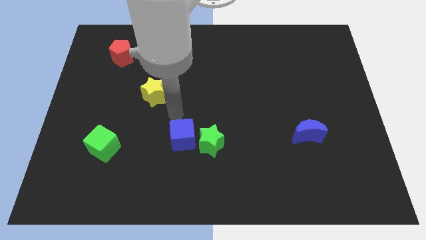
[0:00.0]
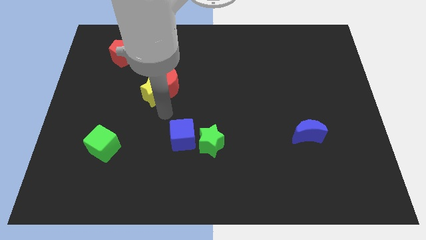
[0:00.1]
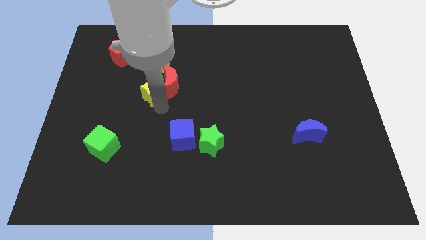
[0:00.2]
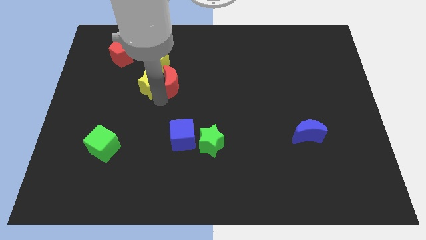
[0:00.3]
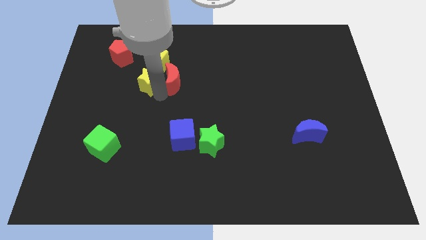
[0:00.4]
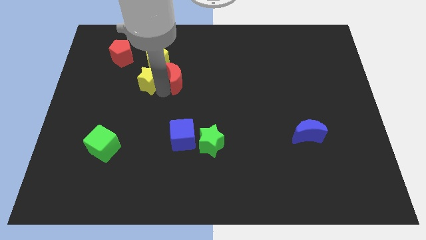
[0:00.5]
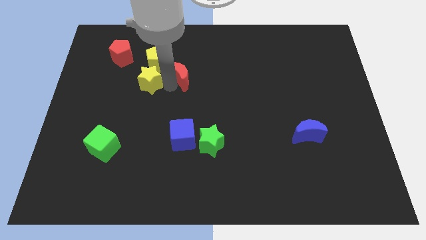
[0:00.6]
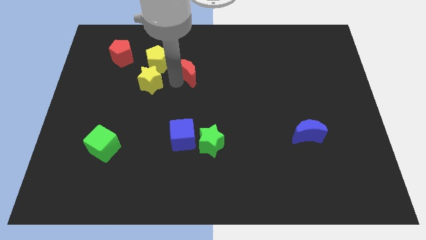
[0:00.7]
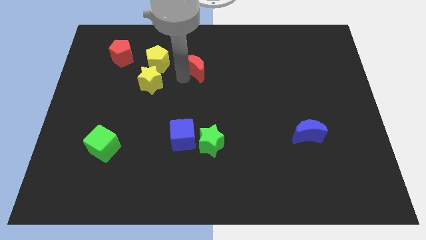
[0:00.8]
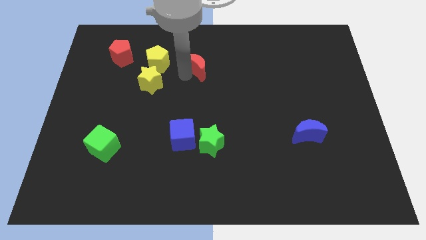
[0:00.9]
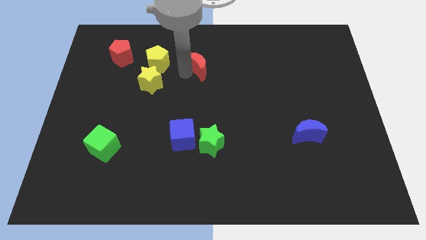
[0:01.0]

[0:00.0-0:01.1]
move the red crescent to the right side of the yellow pentagon

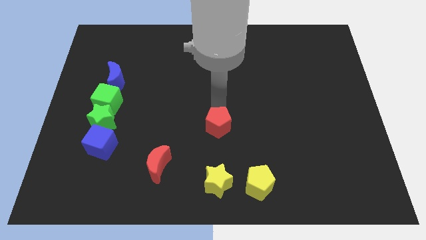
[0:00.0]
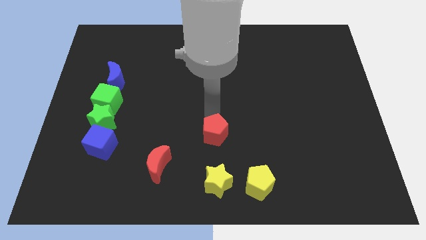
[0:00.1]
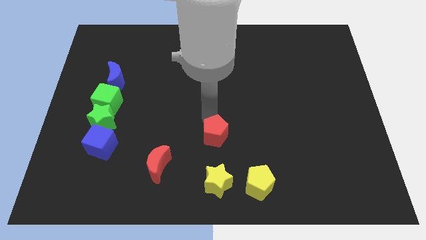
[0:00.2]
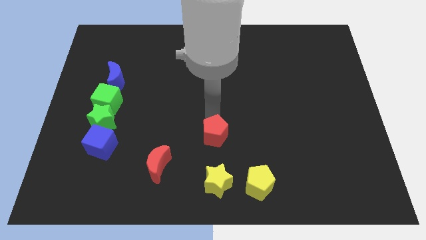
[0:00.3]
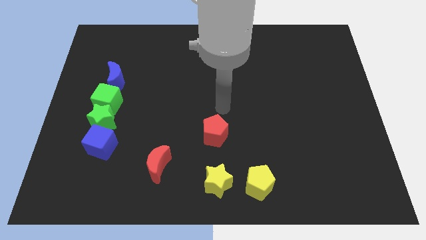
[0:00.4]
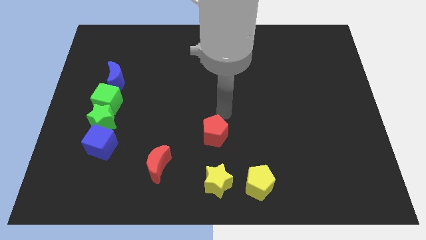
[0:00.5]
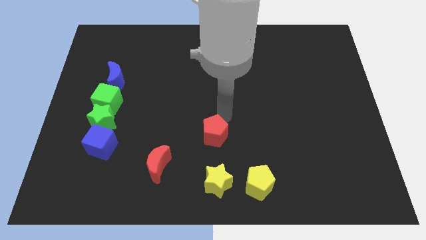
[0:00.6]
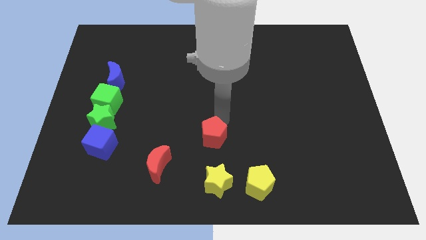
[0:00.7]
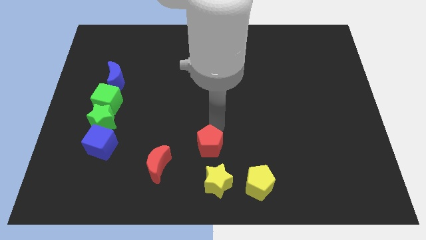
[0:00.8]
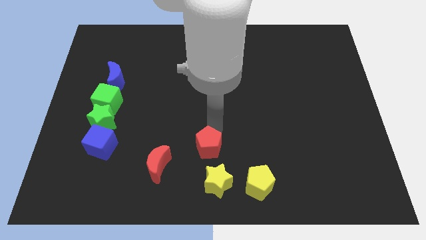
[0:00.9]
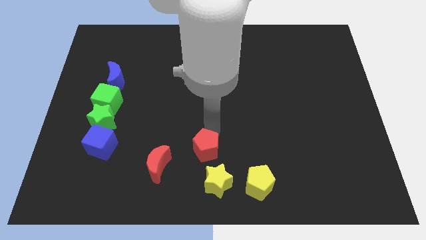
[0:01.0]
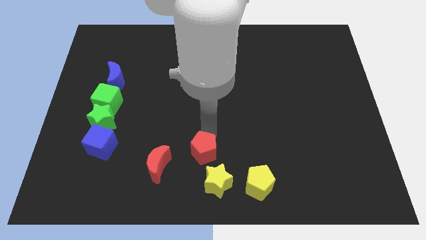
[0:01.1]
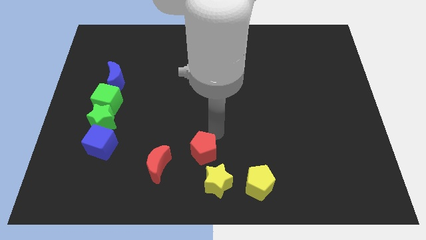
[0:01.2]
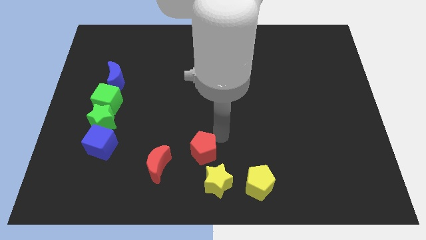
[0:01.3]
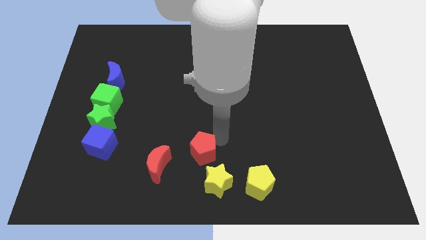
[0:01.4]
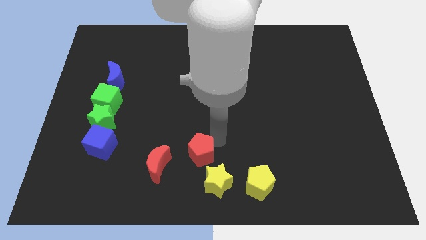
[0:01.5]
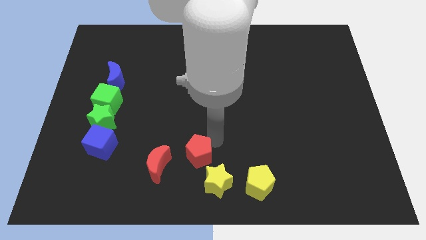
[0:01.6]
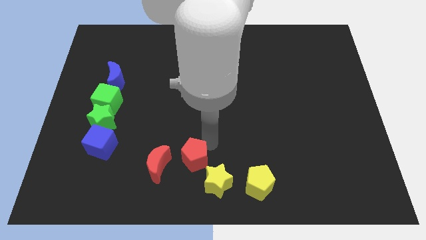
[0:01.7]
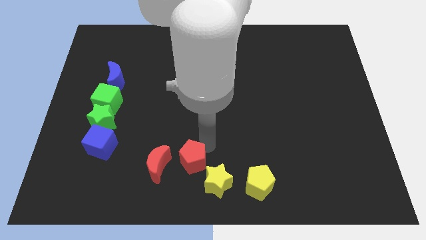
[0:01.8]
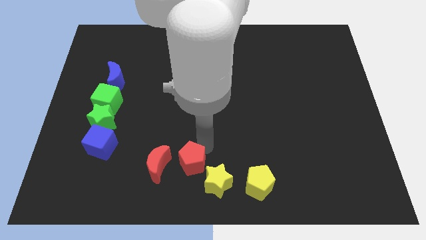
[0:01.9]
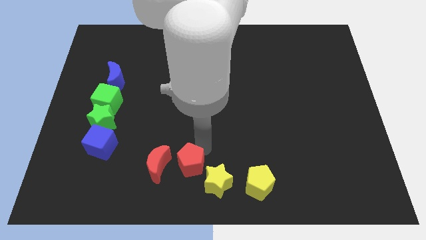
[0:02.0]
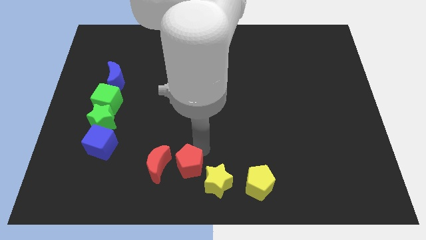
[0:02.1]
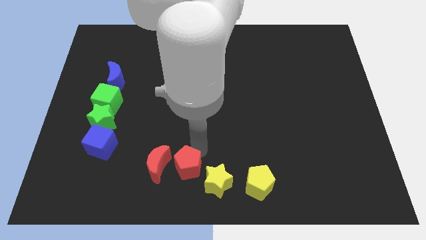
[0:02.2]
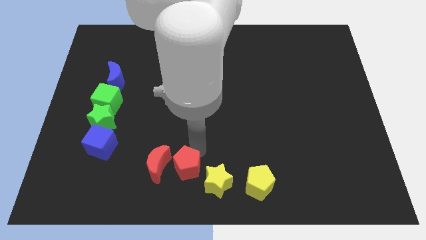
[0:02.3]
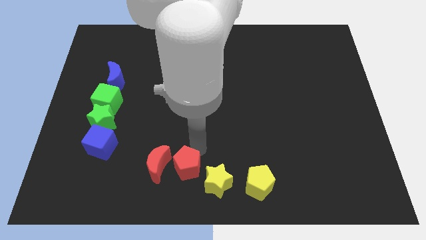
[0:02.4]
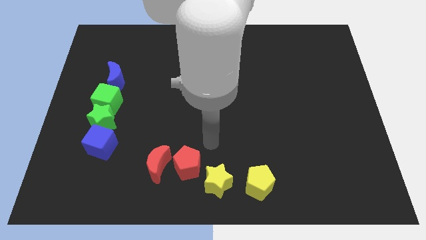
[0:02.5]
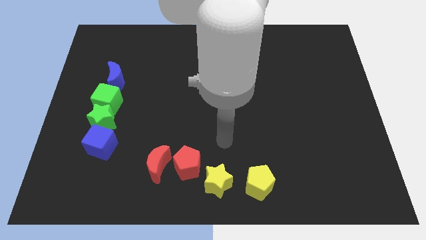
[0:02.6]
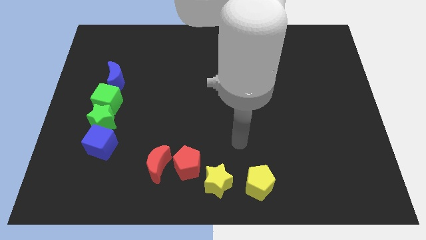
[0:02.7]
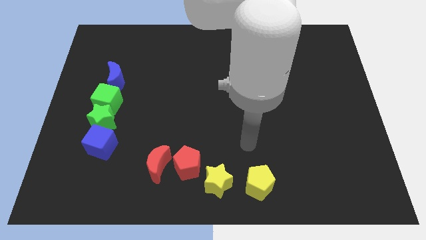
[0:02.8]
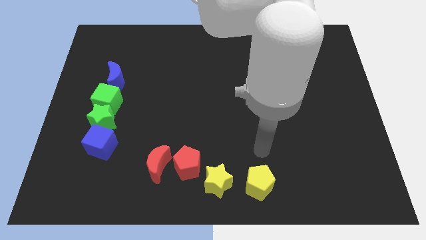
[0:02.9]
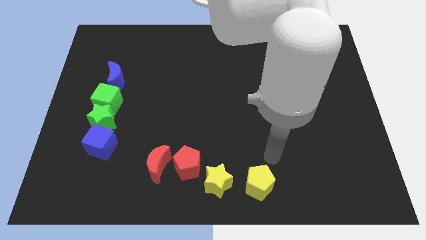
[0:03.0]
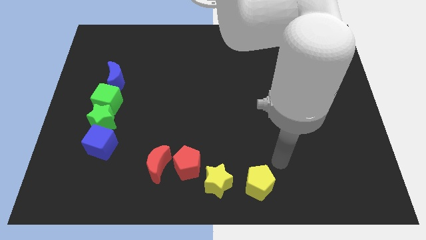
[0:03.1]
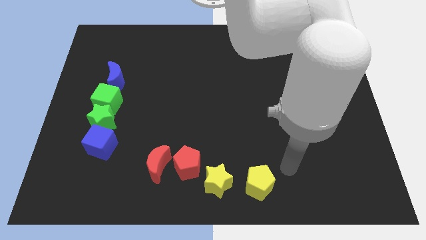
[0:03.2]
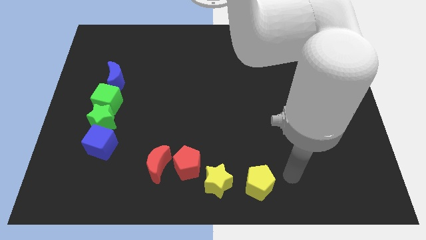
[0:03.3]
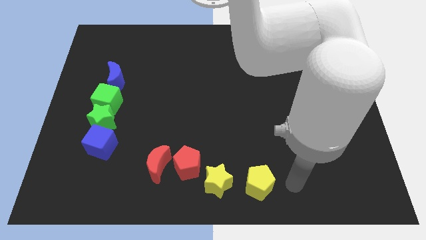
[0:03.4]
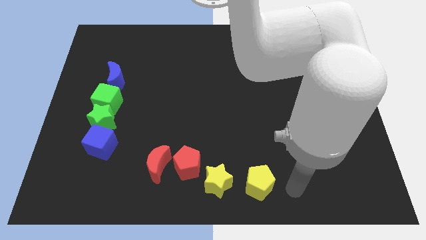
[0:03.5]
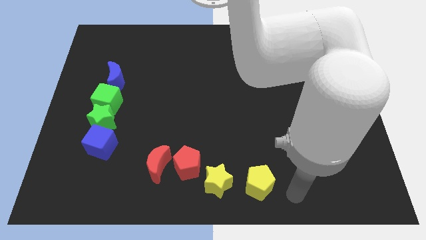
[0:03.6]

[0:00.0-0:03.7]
move the red pentagon to the right of the red moon

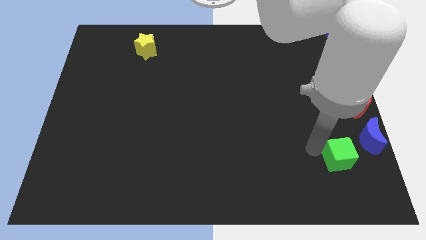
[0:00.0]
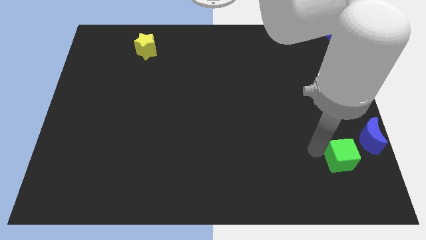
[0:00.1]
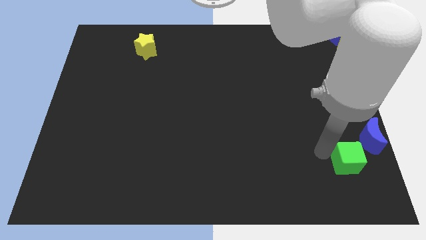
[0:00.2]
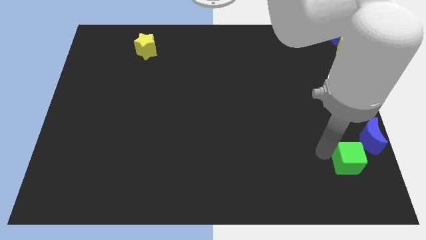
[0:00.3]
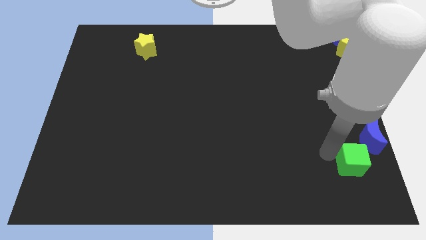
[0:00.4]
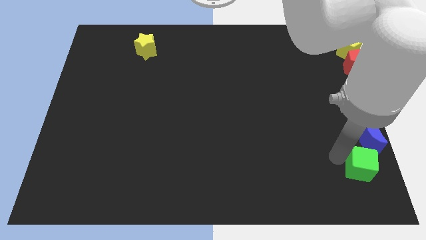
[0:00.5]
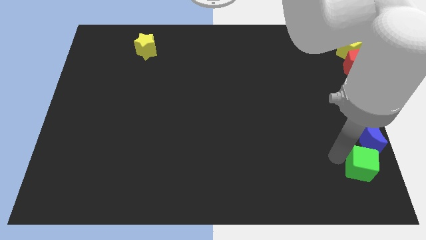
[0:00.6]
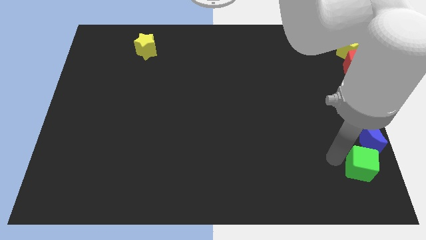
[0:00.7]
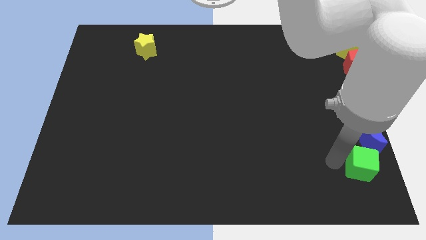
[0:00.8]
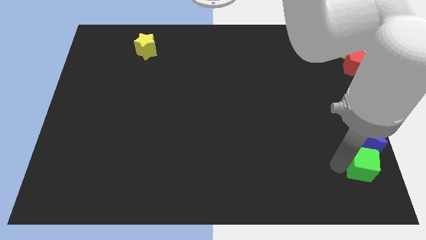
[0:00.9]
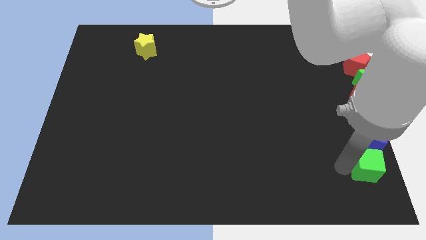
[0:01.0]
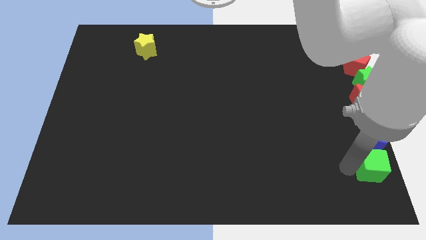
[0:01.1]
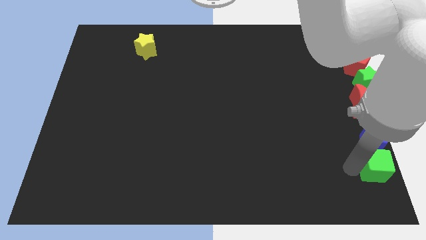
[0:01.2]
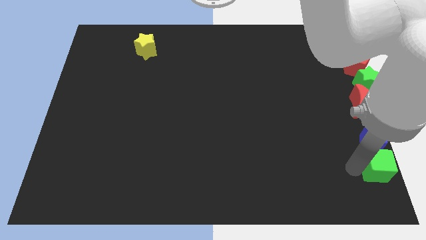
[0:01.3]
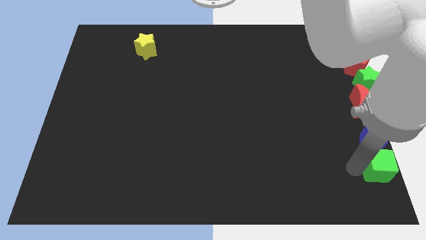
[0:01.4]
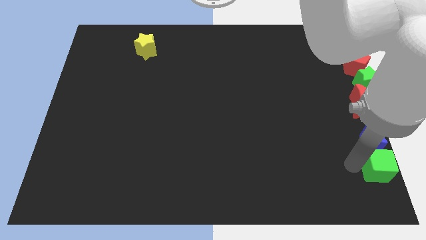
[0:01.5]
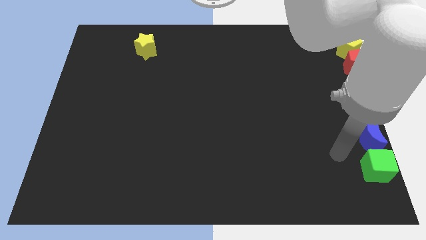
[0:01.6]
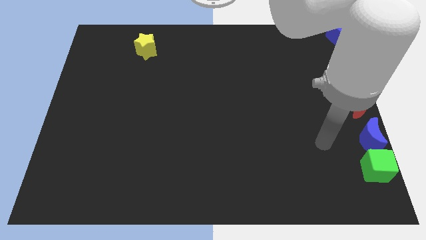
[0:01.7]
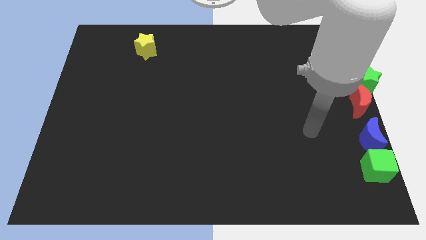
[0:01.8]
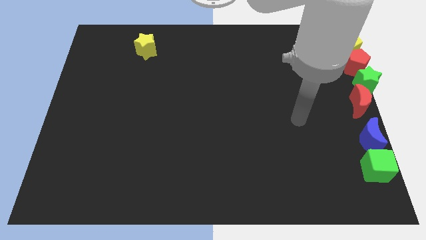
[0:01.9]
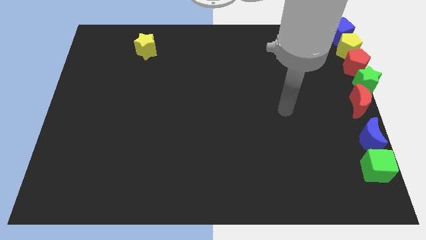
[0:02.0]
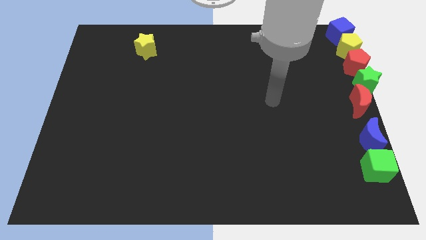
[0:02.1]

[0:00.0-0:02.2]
place the green cube below the blue crescent

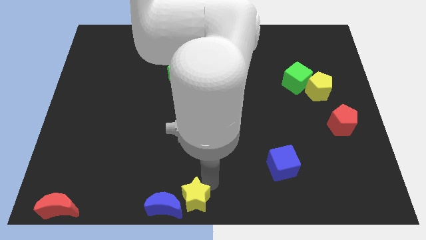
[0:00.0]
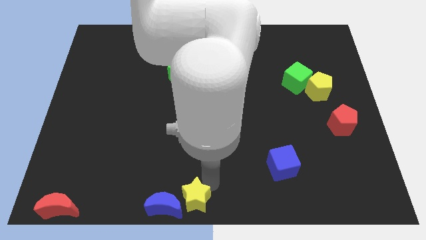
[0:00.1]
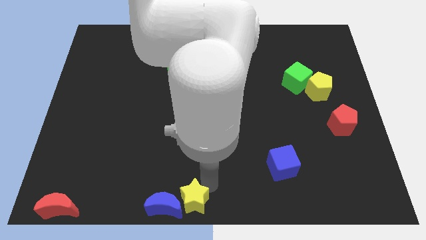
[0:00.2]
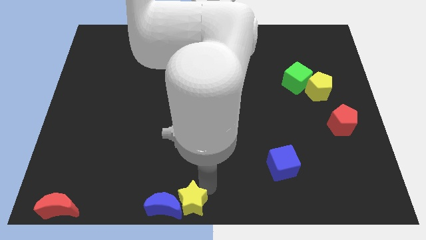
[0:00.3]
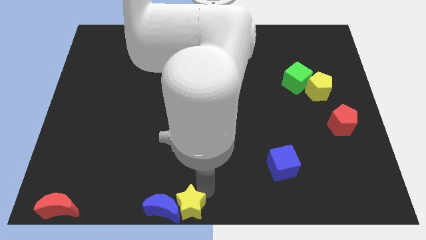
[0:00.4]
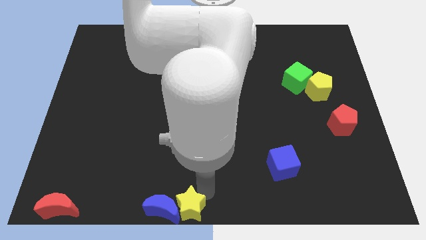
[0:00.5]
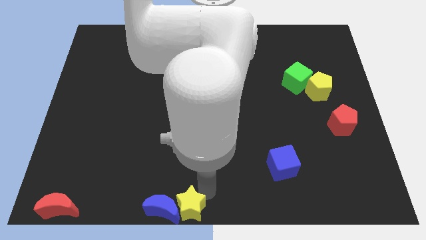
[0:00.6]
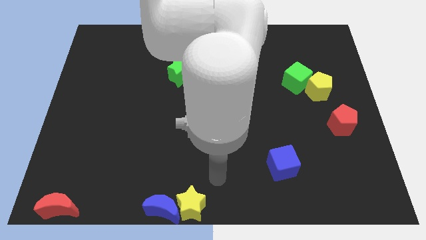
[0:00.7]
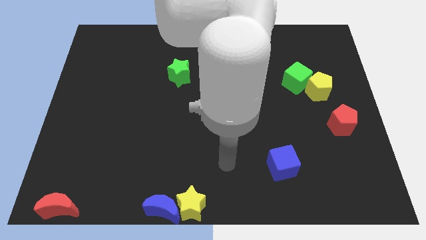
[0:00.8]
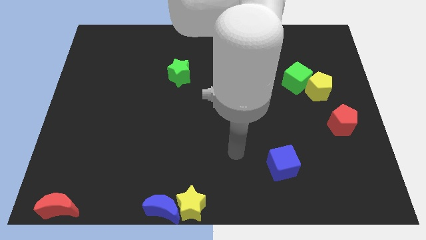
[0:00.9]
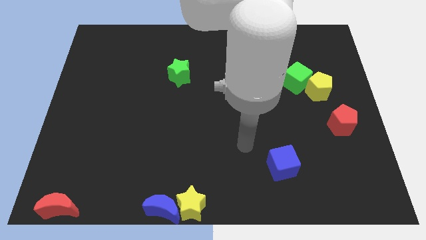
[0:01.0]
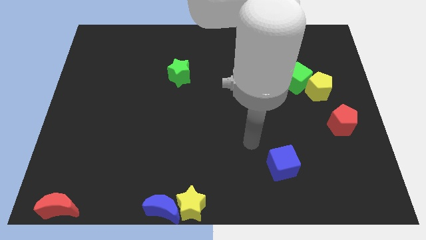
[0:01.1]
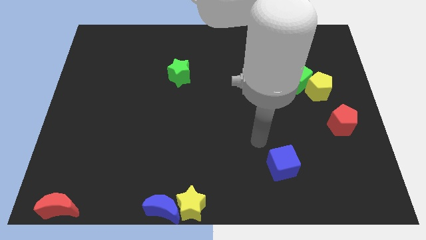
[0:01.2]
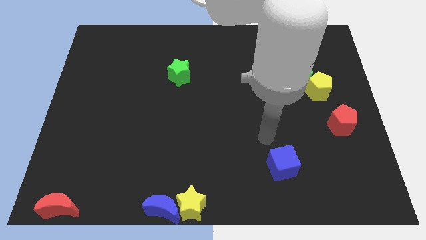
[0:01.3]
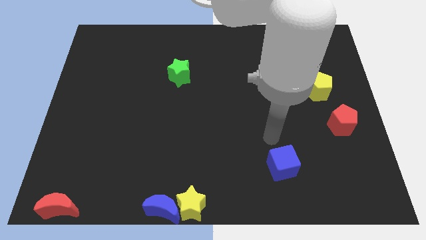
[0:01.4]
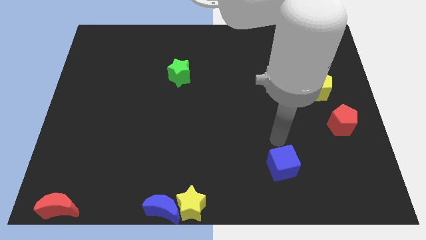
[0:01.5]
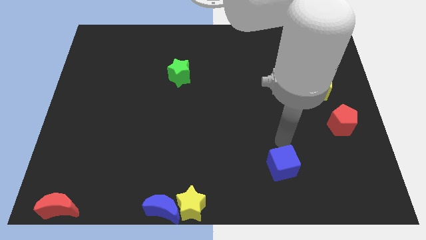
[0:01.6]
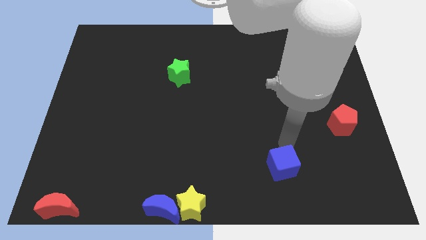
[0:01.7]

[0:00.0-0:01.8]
point your arm to the top of blue cube

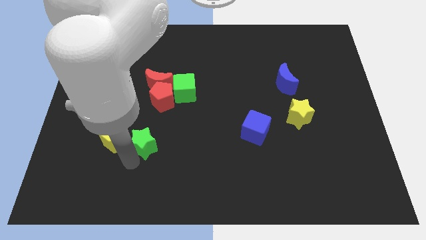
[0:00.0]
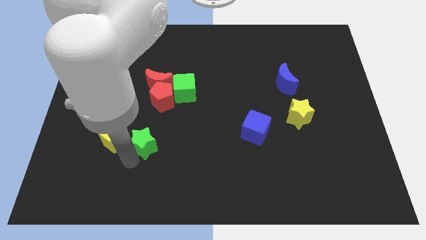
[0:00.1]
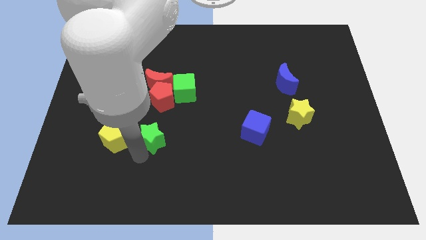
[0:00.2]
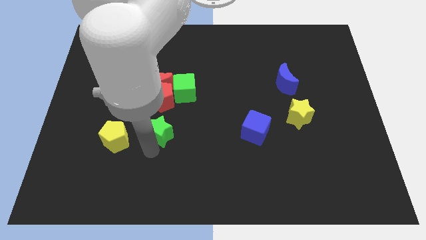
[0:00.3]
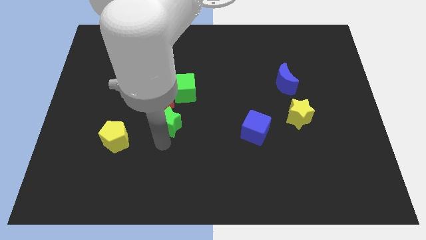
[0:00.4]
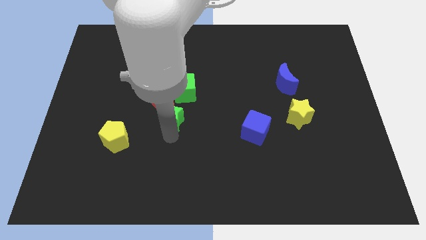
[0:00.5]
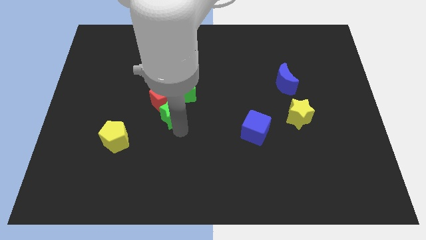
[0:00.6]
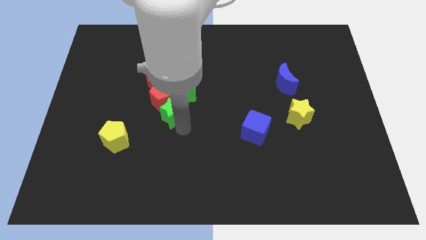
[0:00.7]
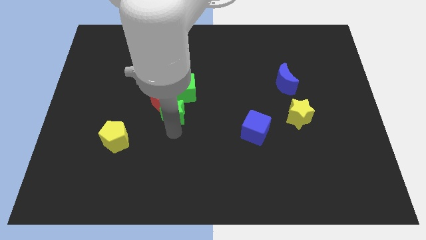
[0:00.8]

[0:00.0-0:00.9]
move the green star at the bottom of red pentagon
